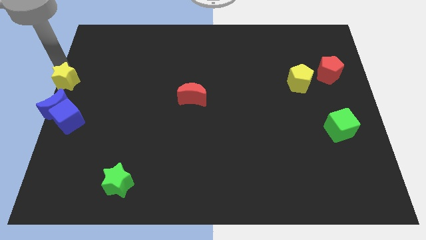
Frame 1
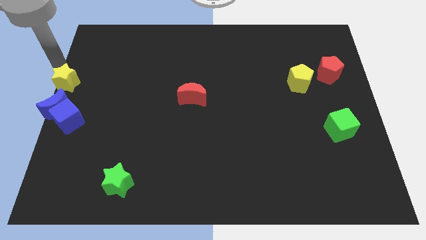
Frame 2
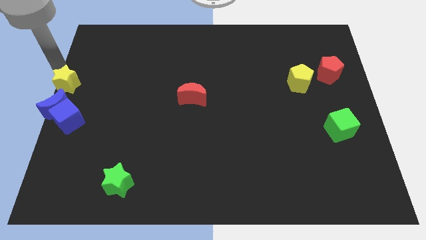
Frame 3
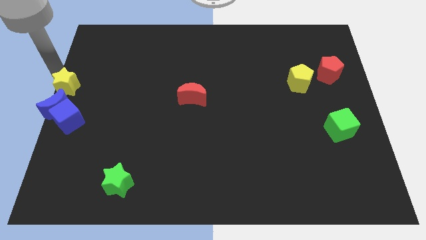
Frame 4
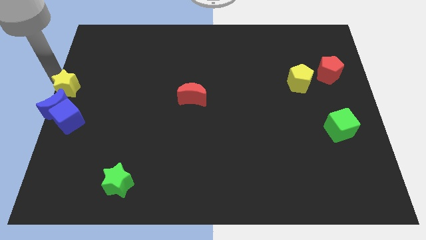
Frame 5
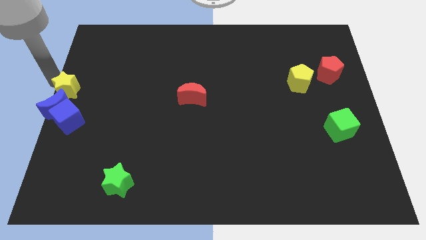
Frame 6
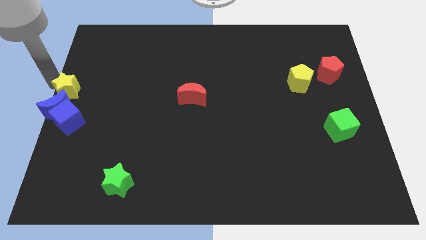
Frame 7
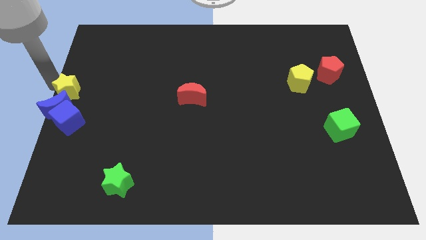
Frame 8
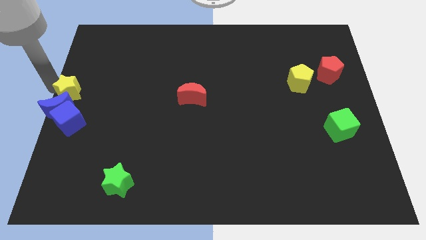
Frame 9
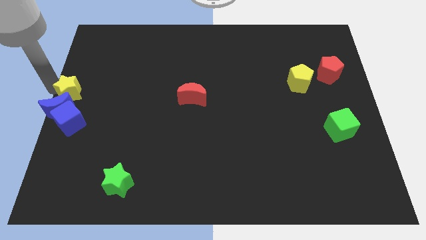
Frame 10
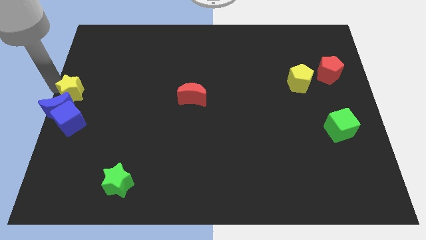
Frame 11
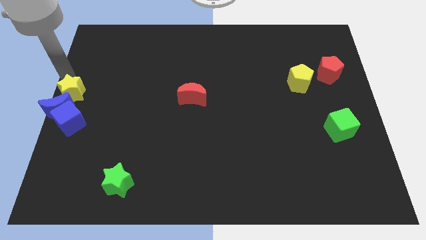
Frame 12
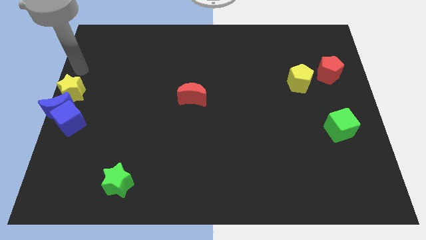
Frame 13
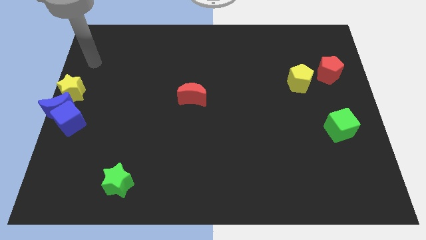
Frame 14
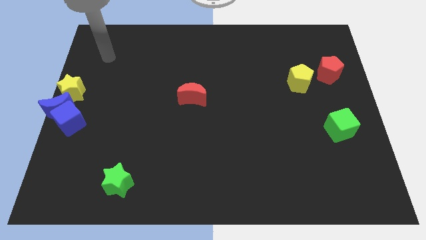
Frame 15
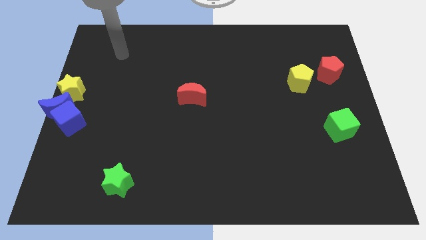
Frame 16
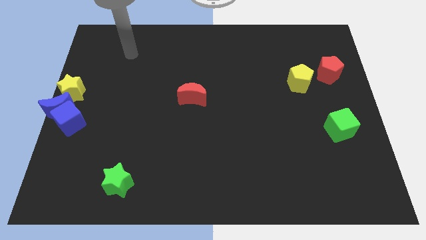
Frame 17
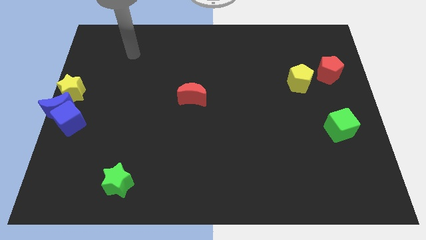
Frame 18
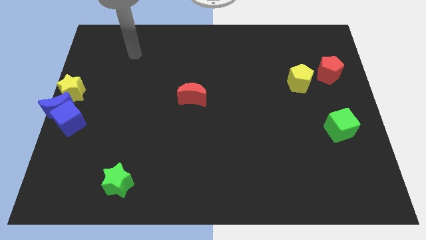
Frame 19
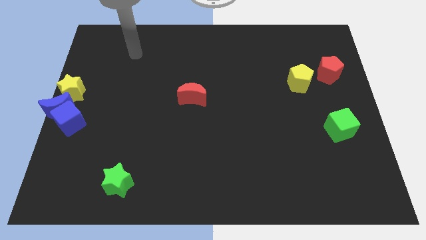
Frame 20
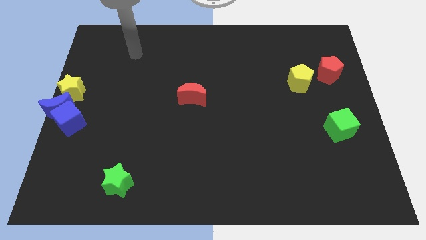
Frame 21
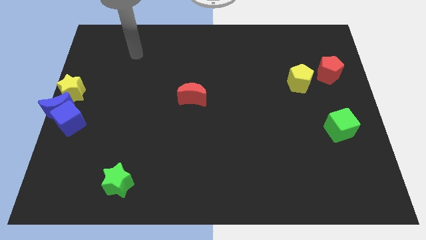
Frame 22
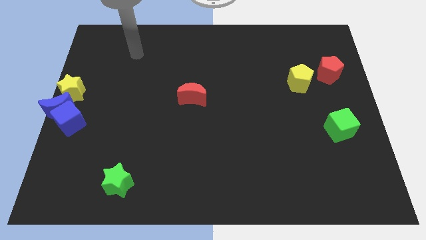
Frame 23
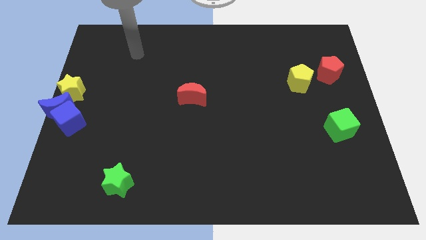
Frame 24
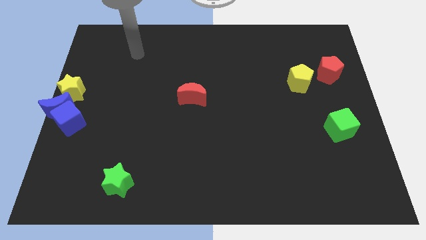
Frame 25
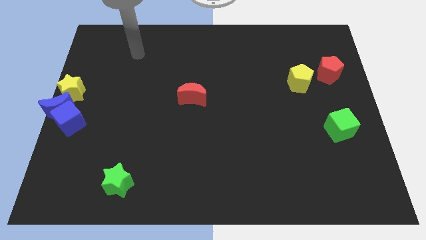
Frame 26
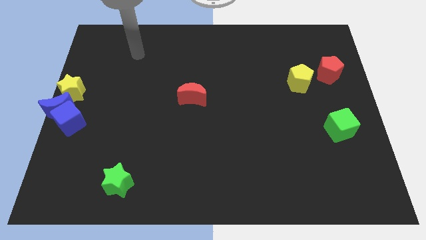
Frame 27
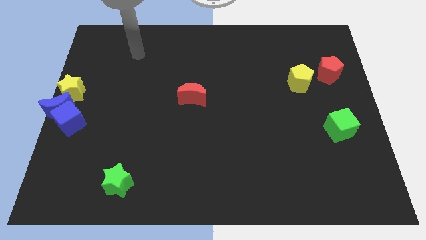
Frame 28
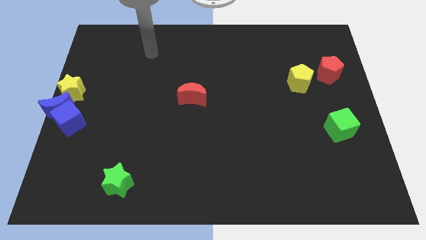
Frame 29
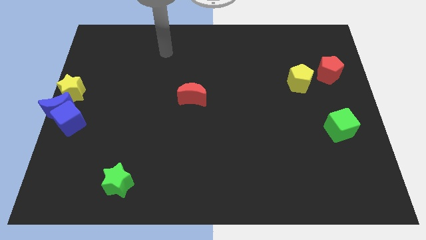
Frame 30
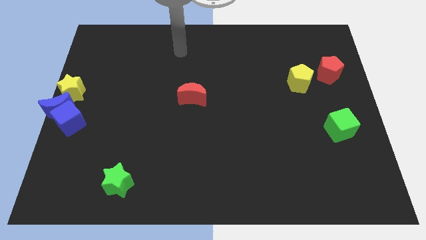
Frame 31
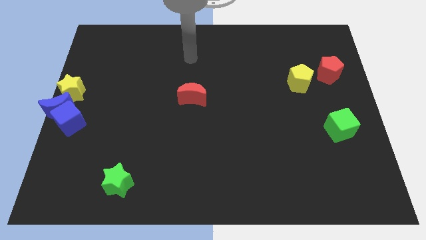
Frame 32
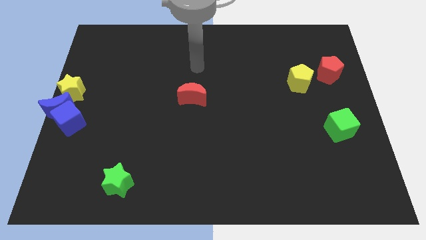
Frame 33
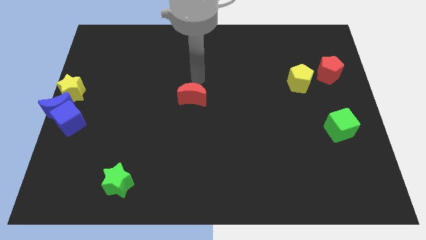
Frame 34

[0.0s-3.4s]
move yellow star into blue moon

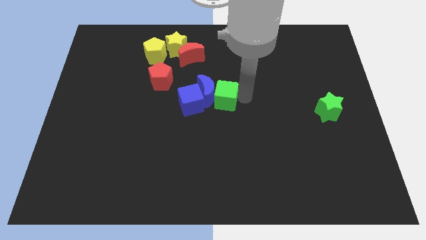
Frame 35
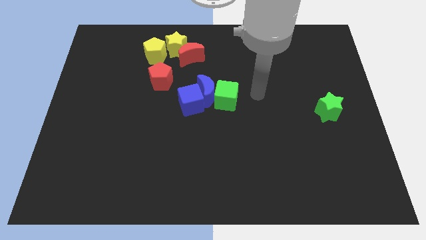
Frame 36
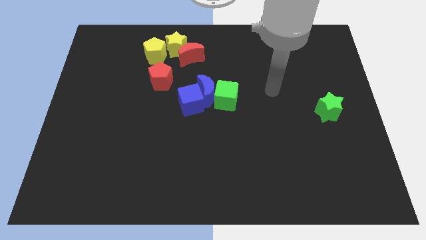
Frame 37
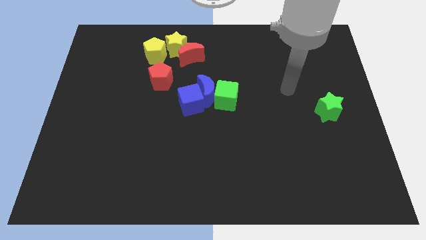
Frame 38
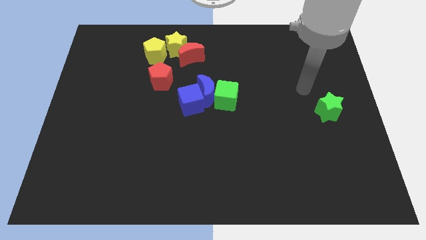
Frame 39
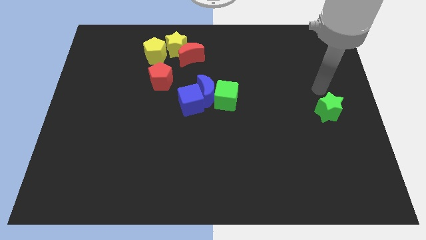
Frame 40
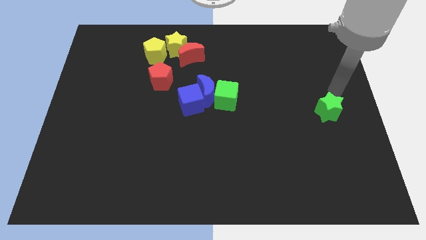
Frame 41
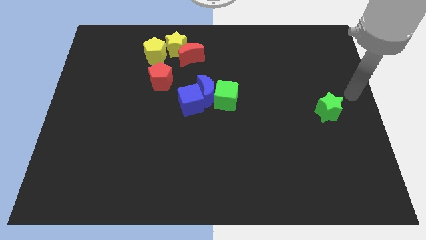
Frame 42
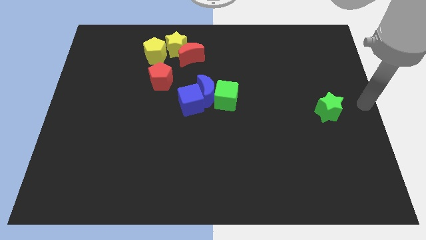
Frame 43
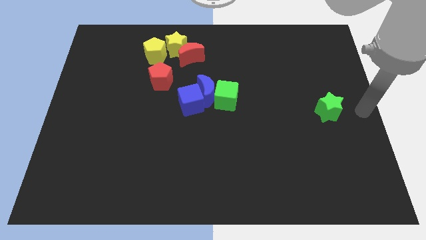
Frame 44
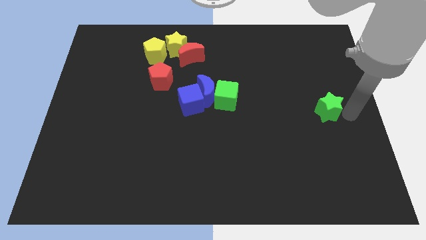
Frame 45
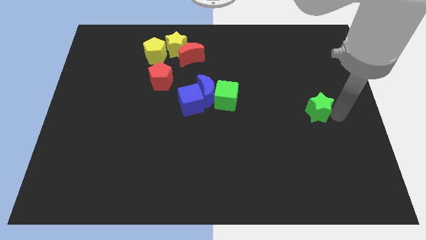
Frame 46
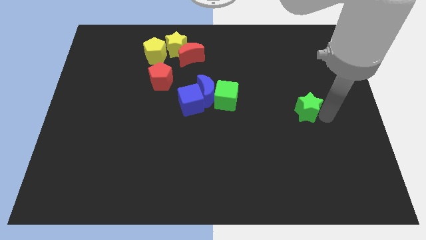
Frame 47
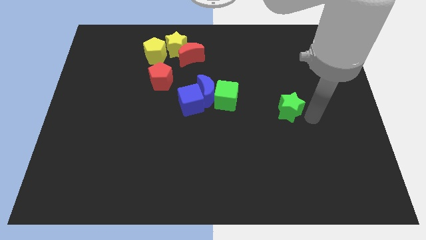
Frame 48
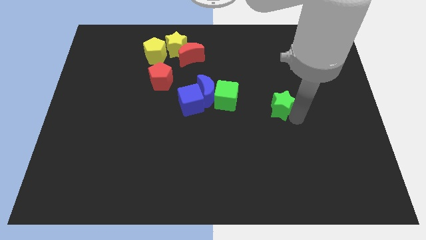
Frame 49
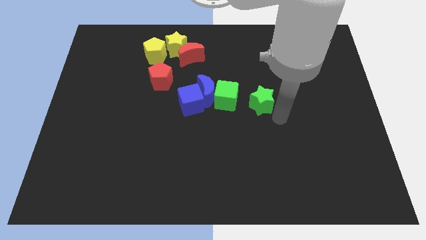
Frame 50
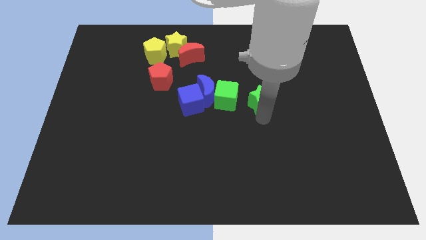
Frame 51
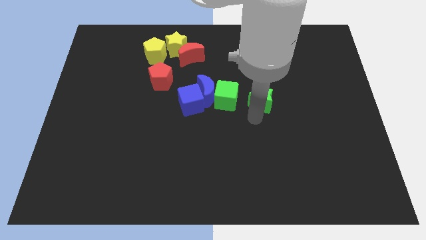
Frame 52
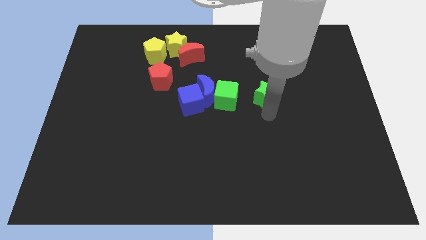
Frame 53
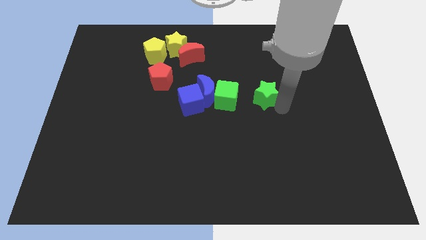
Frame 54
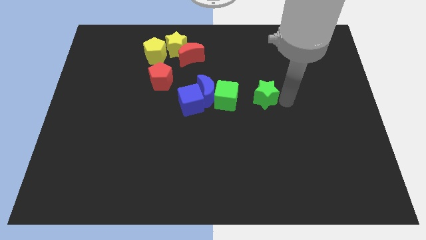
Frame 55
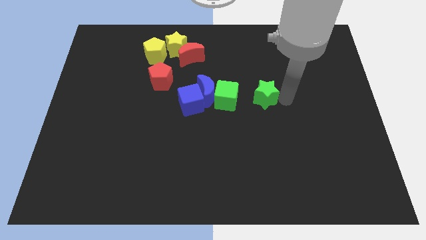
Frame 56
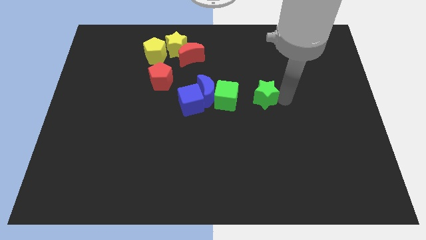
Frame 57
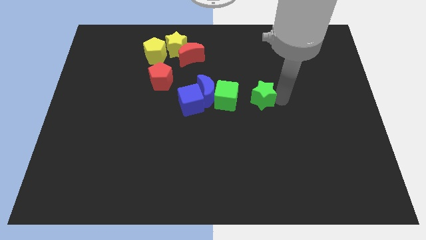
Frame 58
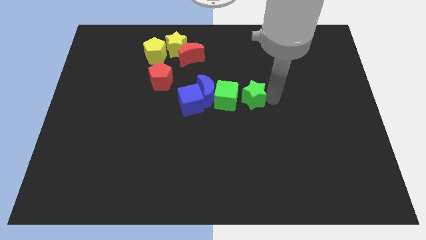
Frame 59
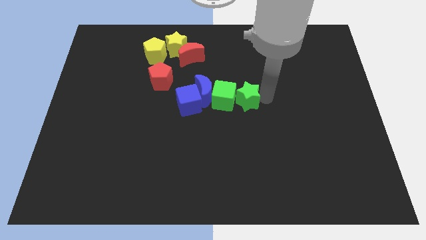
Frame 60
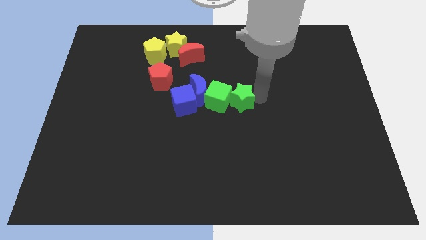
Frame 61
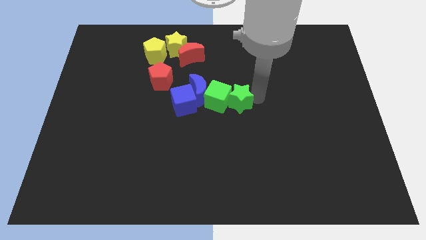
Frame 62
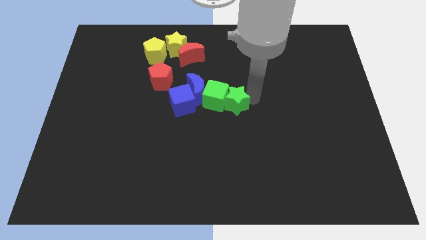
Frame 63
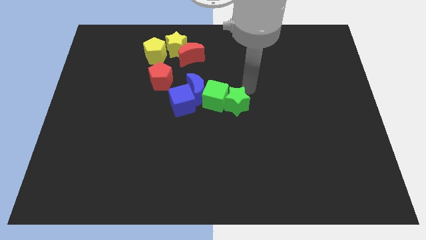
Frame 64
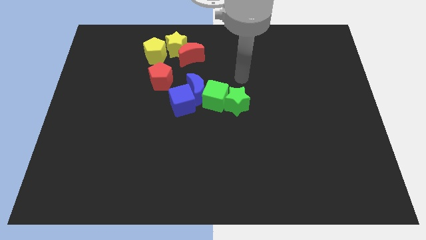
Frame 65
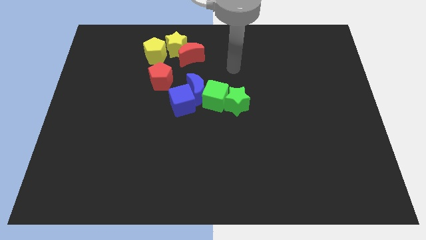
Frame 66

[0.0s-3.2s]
push the green star right into the green cube

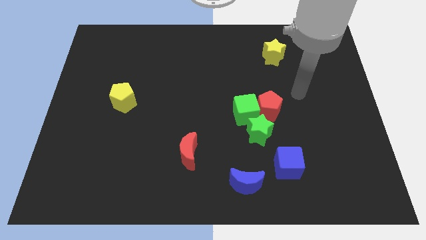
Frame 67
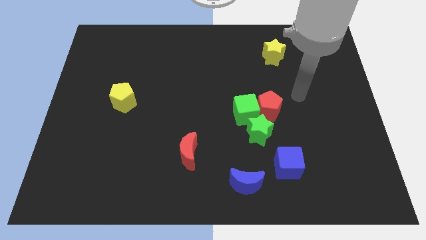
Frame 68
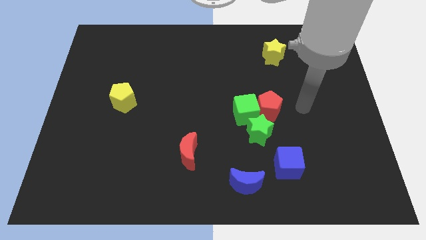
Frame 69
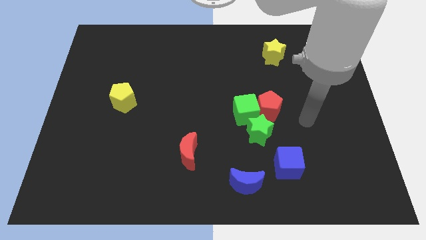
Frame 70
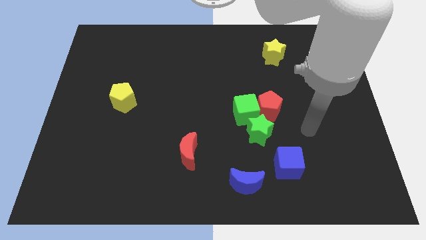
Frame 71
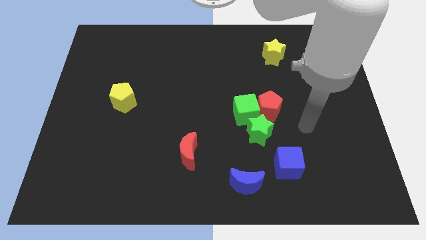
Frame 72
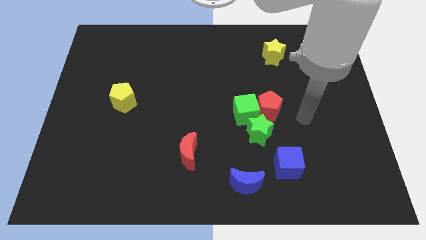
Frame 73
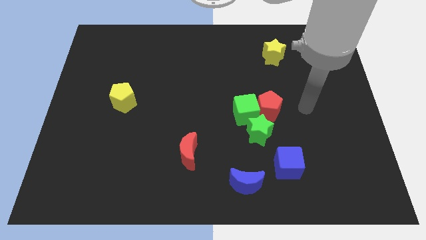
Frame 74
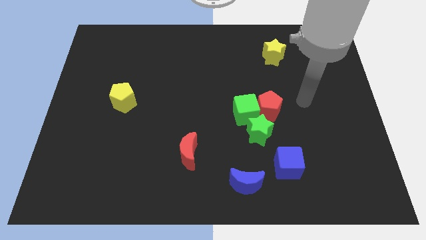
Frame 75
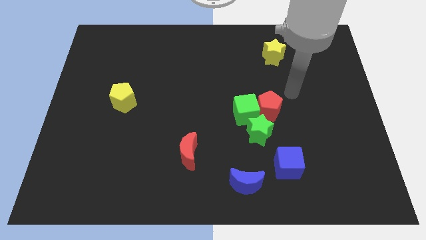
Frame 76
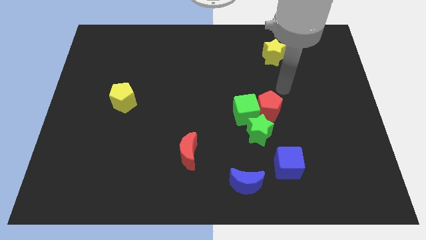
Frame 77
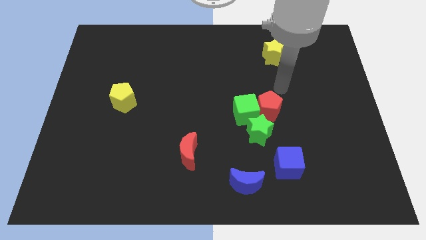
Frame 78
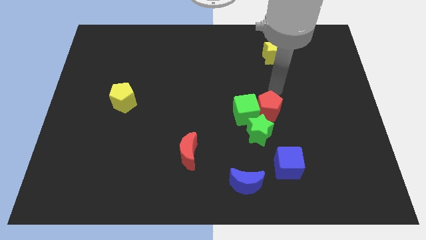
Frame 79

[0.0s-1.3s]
push your arm at the top of the red pentagon

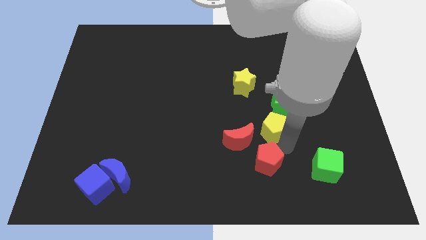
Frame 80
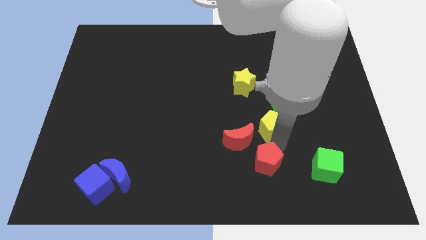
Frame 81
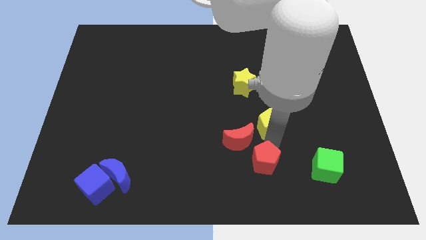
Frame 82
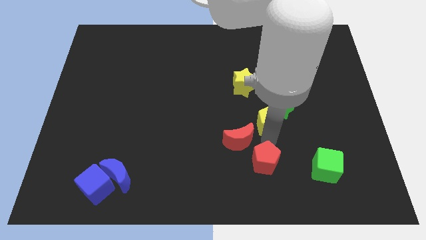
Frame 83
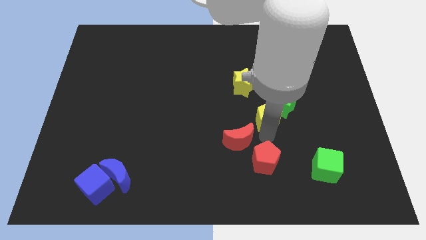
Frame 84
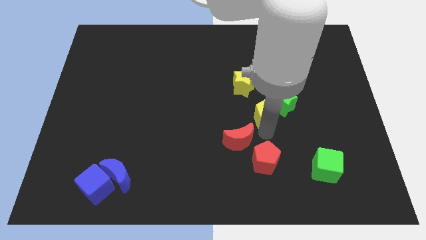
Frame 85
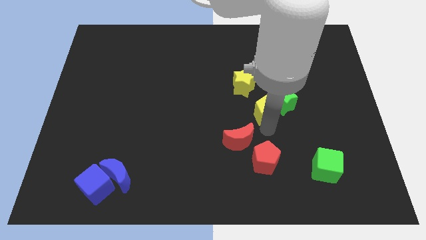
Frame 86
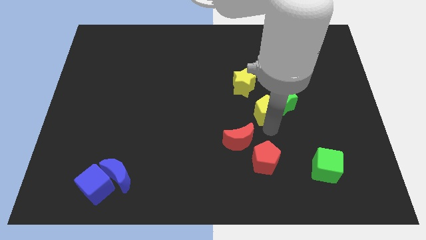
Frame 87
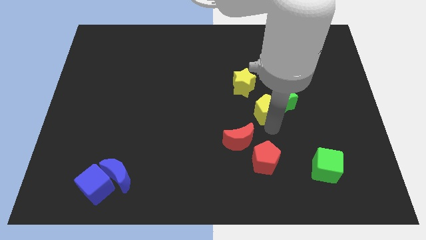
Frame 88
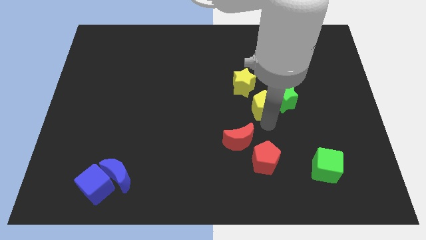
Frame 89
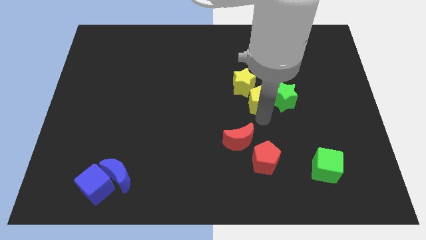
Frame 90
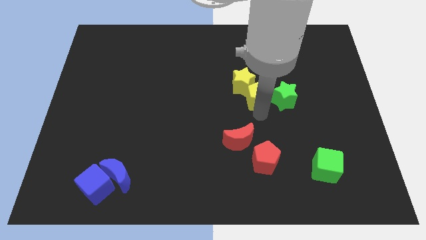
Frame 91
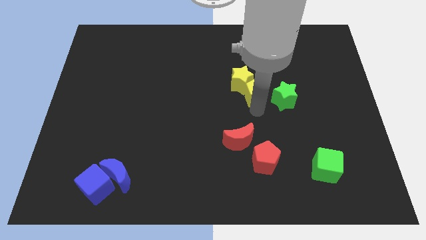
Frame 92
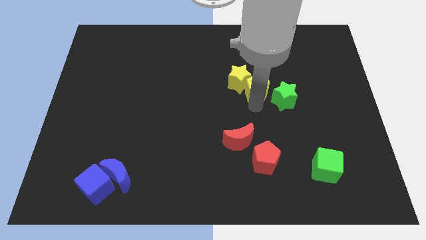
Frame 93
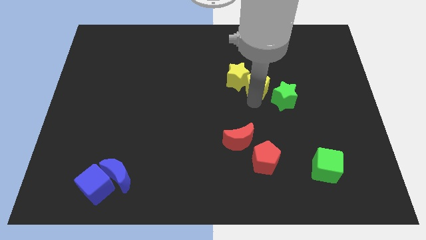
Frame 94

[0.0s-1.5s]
put the yellow pentagon into the yellow star
